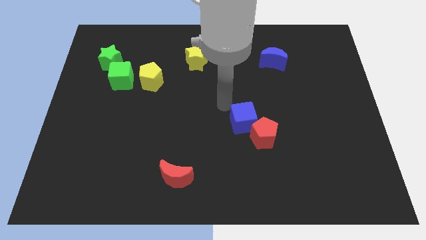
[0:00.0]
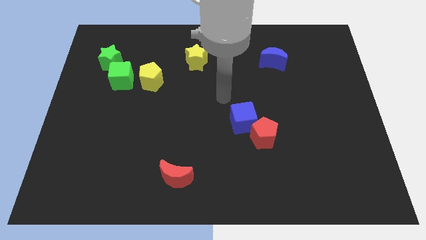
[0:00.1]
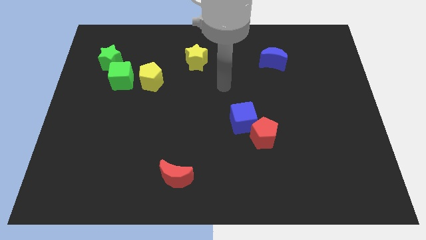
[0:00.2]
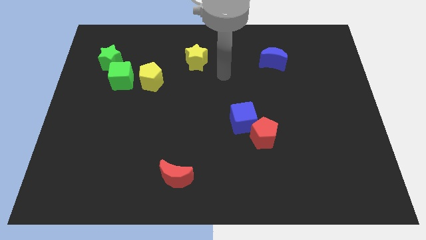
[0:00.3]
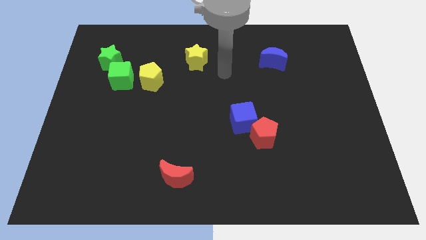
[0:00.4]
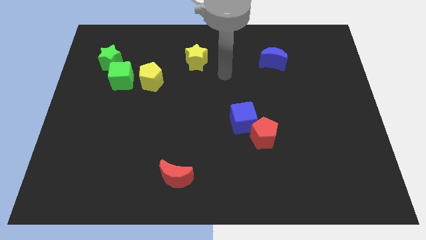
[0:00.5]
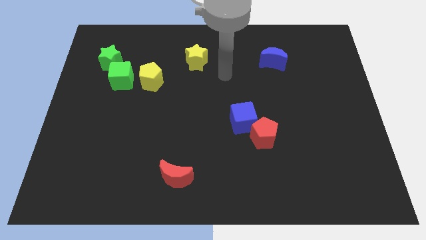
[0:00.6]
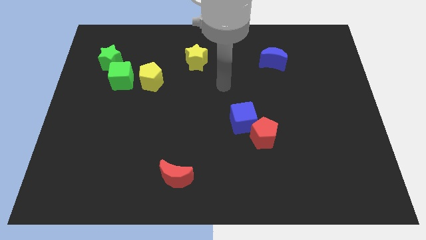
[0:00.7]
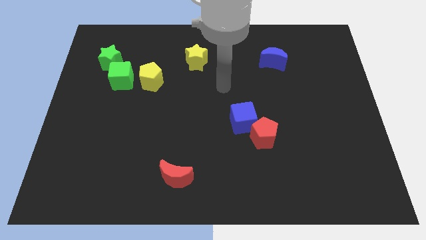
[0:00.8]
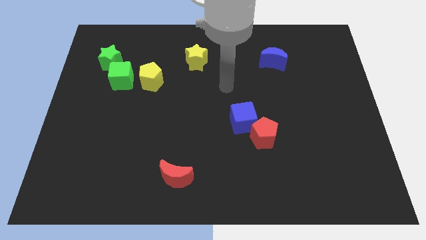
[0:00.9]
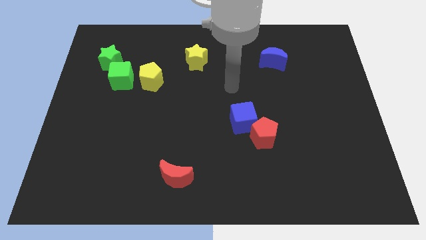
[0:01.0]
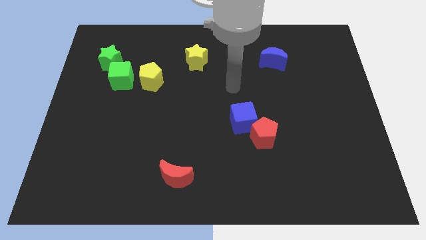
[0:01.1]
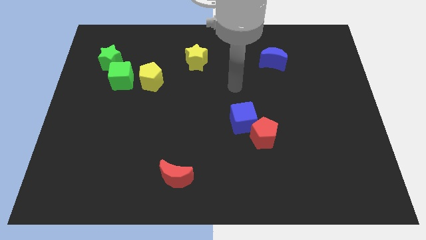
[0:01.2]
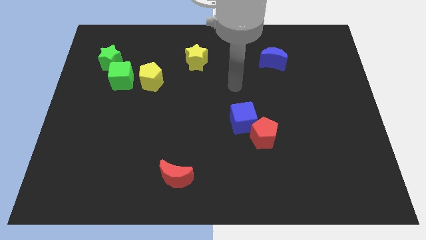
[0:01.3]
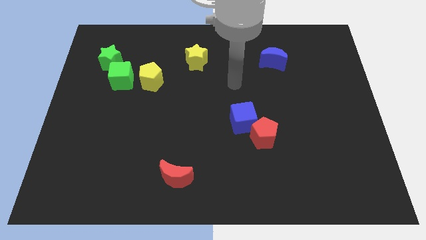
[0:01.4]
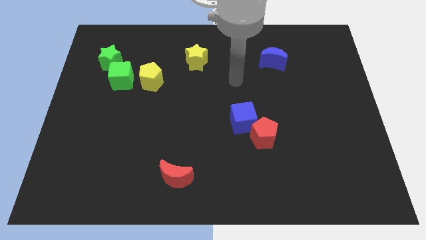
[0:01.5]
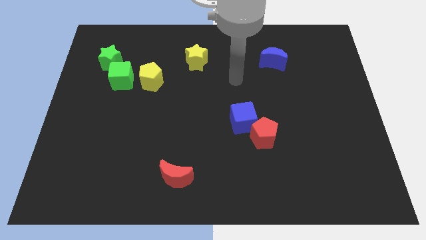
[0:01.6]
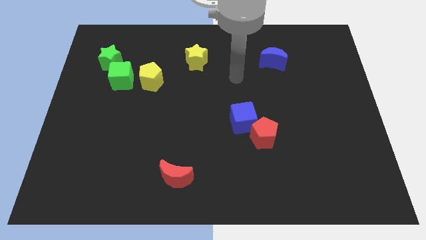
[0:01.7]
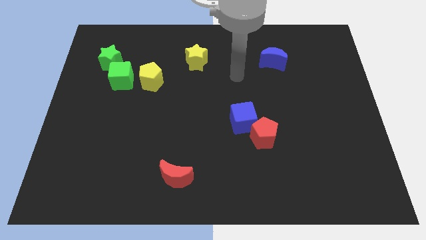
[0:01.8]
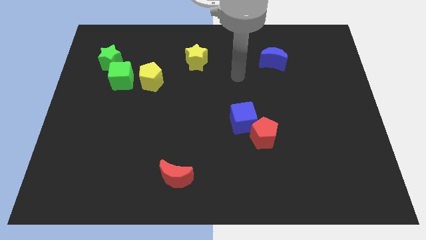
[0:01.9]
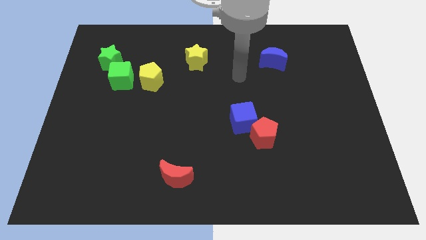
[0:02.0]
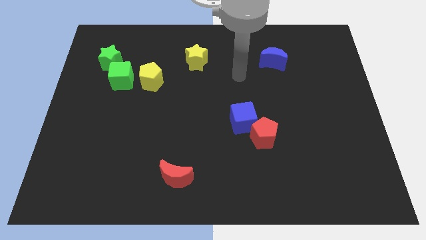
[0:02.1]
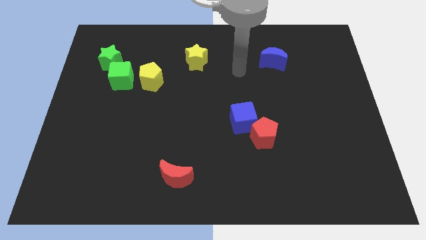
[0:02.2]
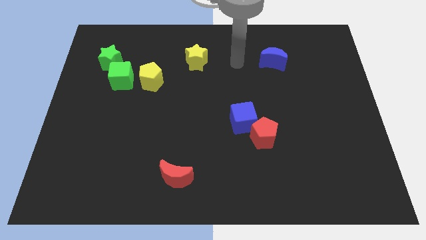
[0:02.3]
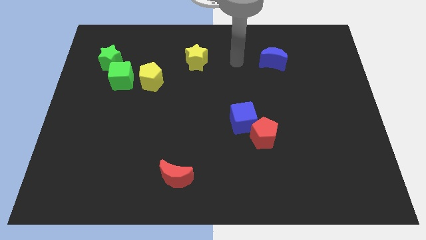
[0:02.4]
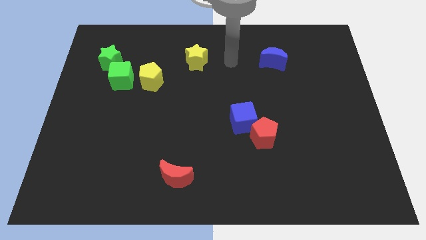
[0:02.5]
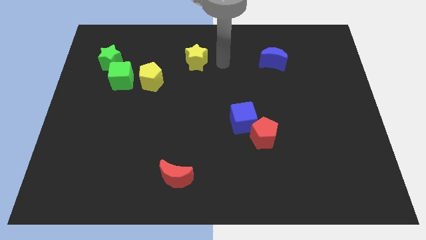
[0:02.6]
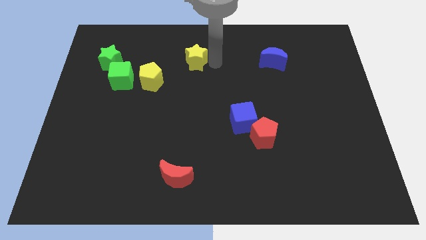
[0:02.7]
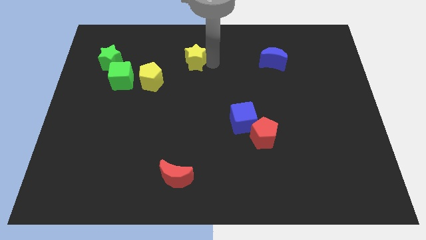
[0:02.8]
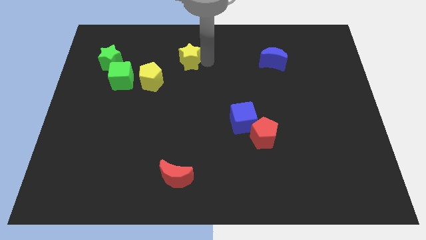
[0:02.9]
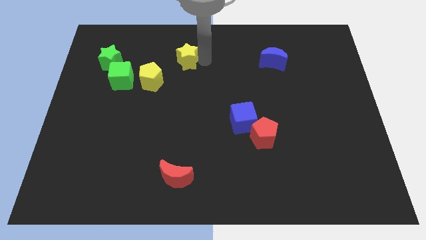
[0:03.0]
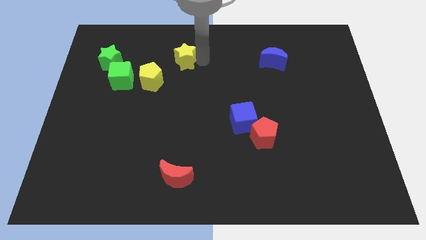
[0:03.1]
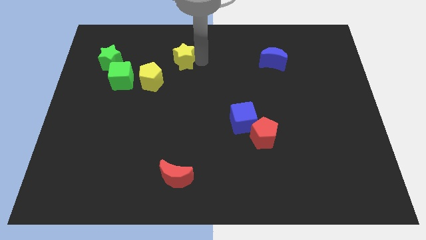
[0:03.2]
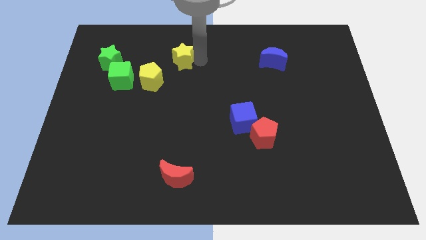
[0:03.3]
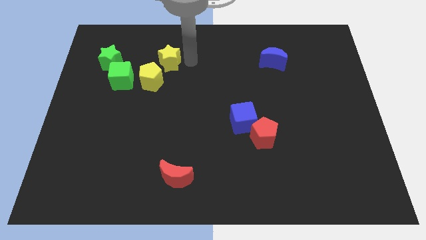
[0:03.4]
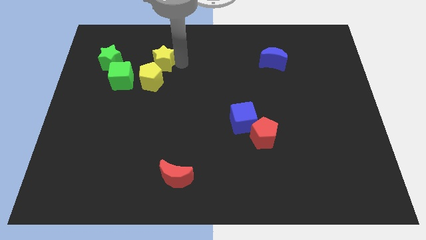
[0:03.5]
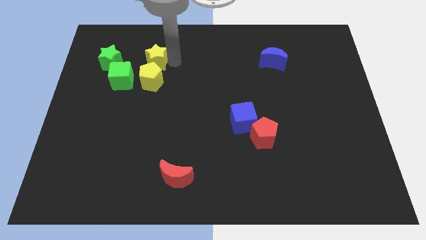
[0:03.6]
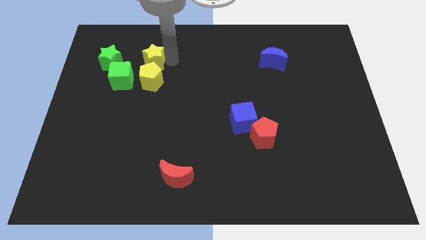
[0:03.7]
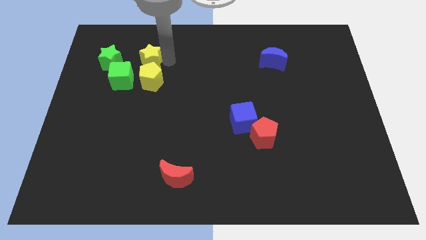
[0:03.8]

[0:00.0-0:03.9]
place yellow star to the top of yellow pentagon

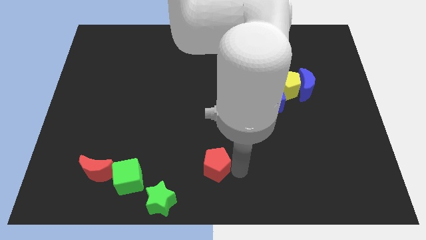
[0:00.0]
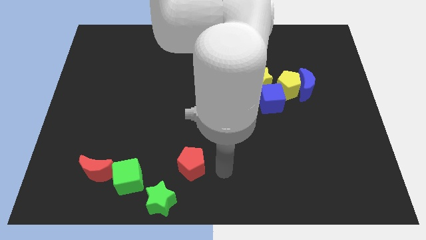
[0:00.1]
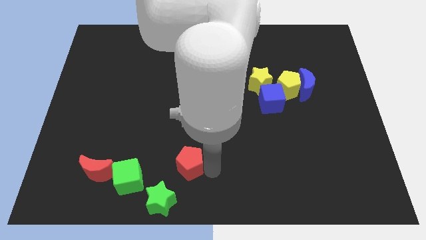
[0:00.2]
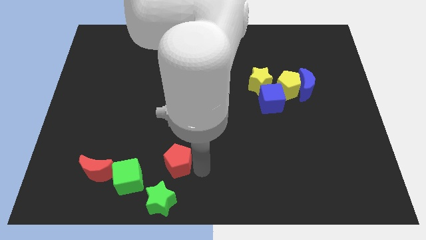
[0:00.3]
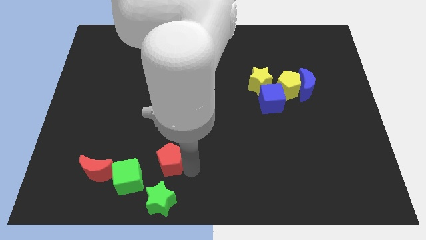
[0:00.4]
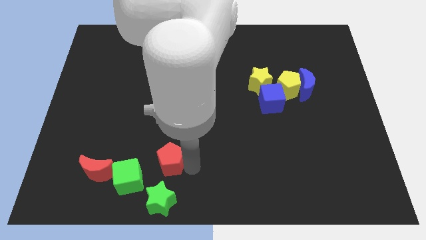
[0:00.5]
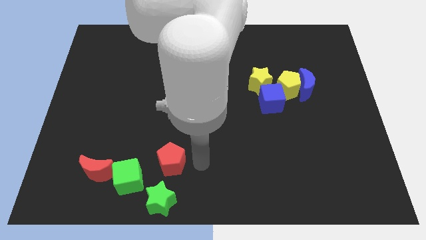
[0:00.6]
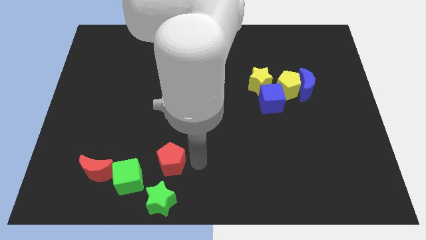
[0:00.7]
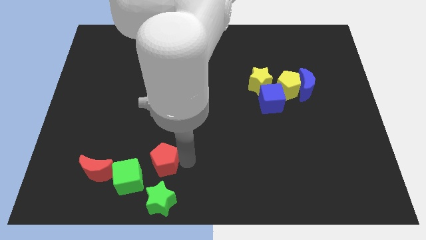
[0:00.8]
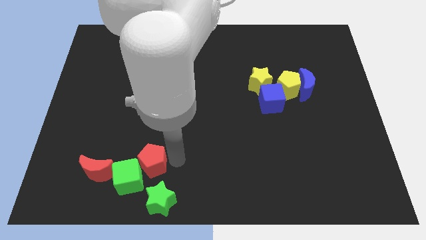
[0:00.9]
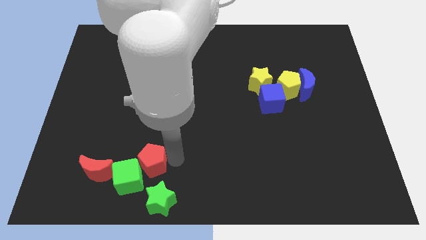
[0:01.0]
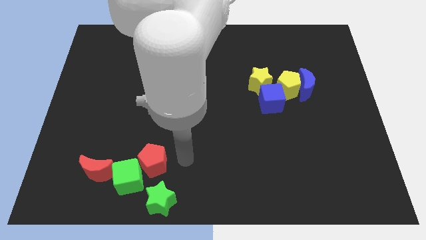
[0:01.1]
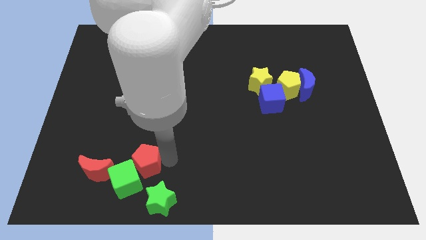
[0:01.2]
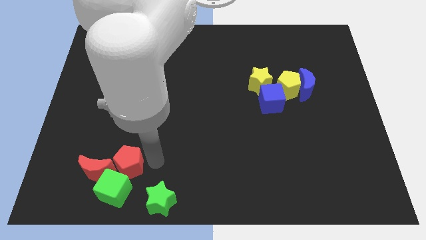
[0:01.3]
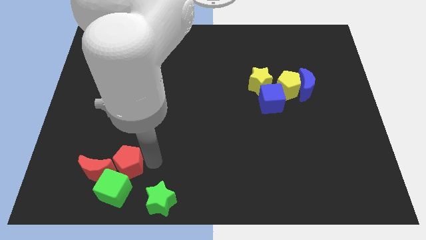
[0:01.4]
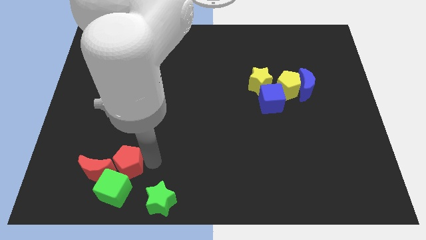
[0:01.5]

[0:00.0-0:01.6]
push the red pentagon into green cube

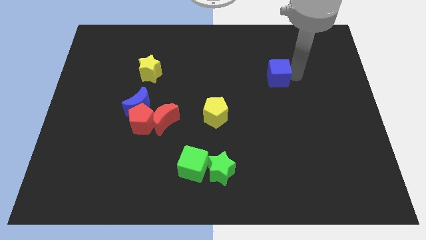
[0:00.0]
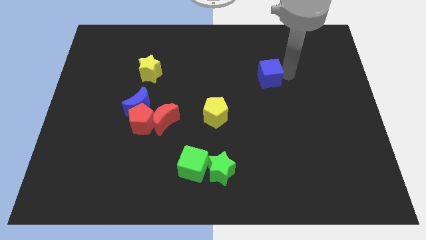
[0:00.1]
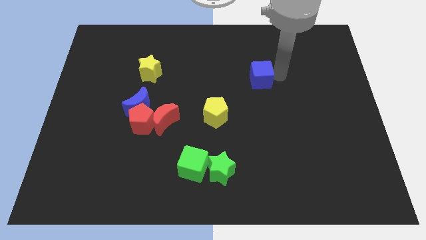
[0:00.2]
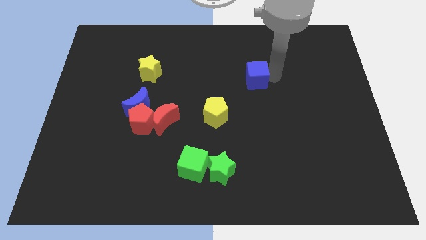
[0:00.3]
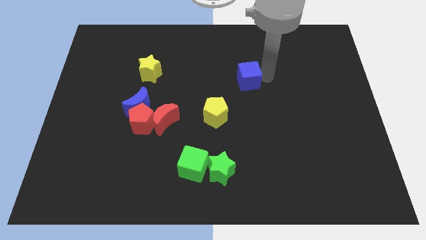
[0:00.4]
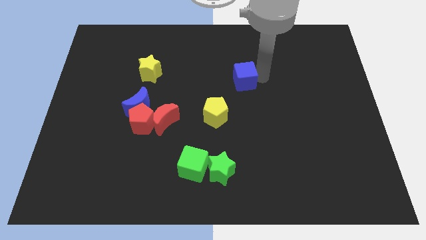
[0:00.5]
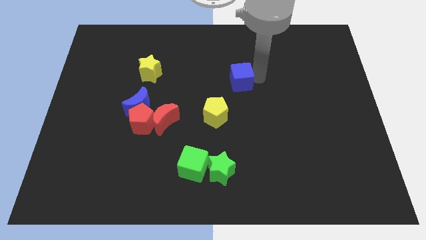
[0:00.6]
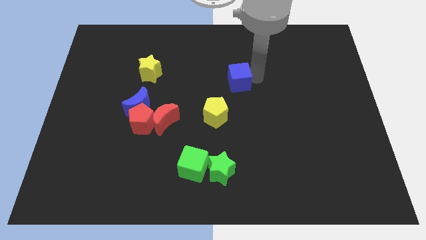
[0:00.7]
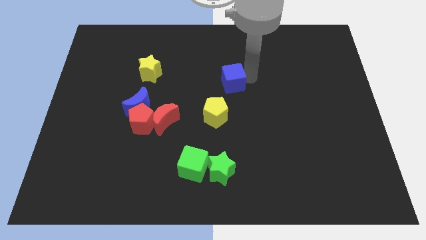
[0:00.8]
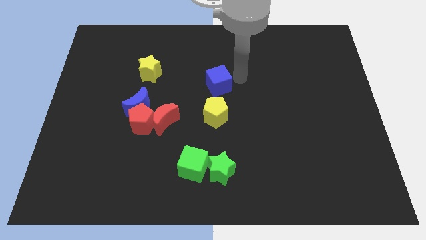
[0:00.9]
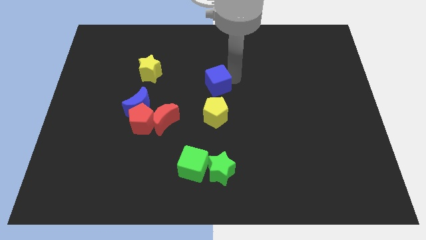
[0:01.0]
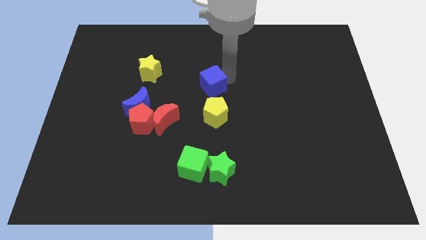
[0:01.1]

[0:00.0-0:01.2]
drag the blue cube vertically above the yellow pentagon

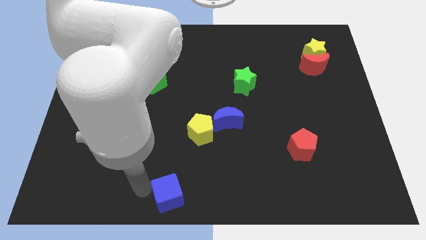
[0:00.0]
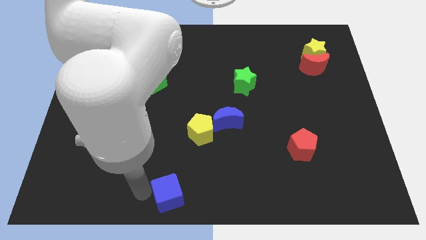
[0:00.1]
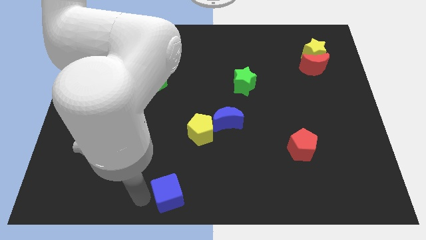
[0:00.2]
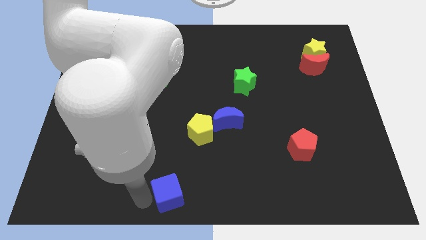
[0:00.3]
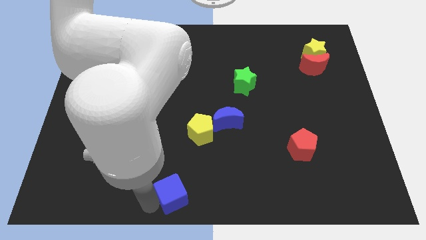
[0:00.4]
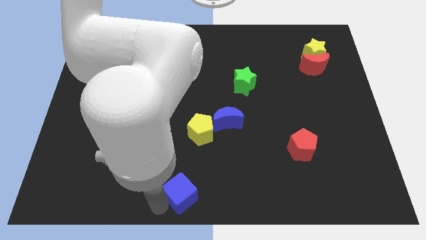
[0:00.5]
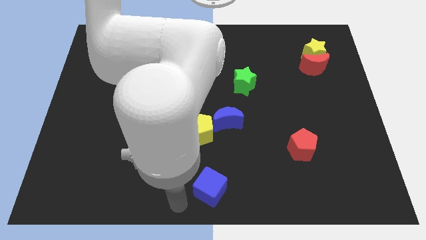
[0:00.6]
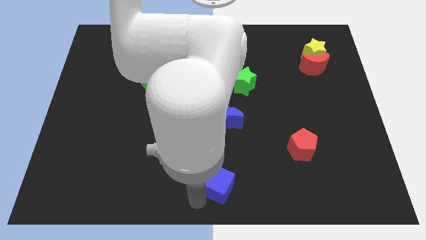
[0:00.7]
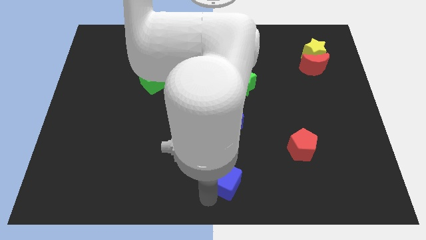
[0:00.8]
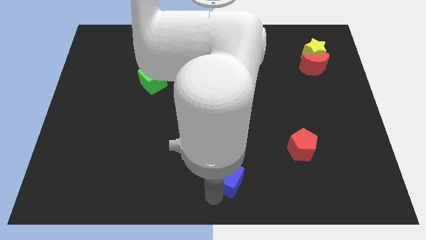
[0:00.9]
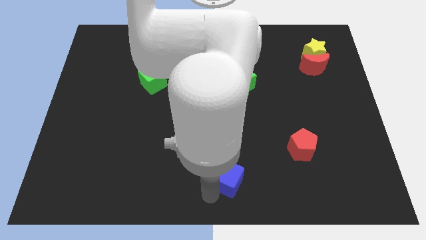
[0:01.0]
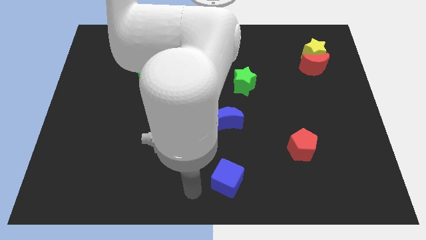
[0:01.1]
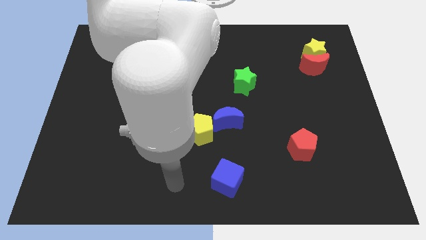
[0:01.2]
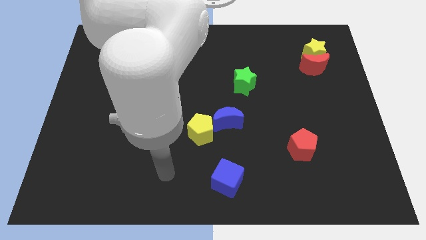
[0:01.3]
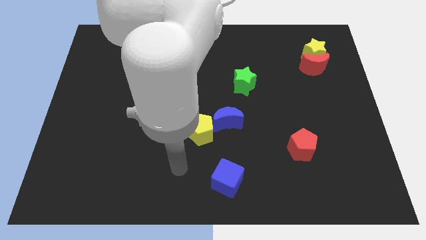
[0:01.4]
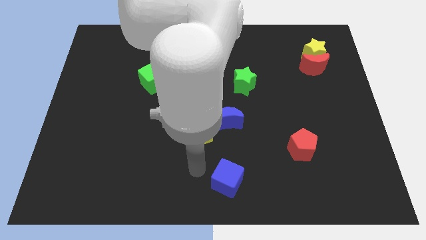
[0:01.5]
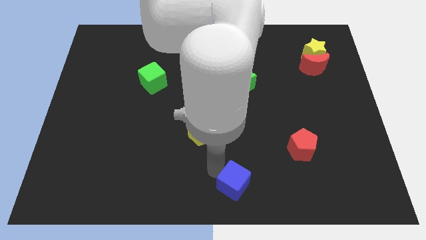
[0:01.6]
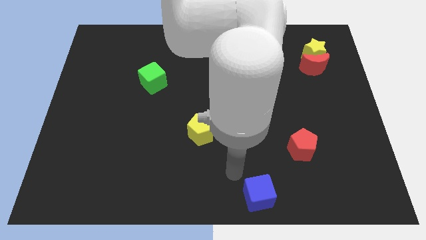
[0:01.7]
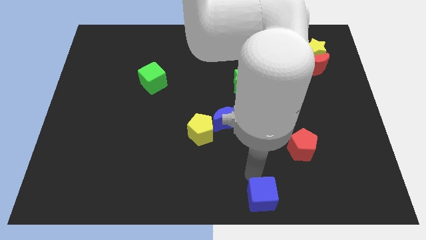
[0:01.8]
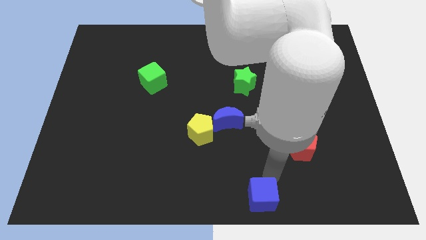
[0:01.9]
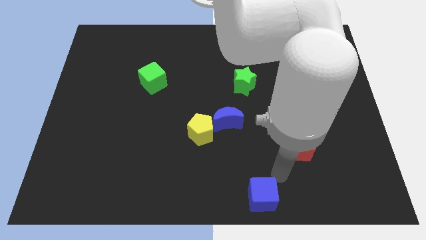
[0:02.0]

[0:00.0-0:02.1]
push the blue cube to the bottom left of the red pentagon
